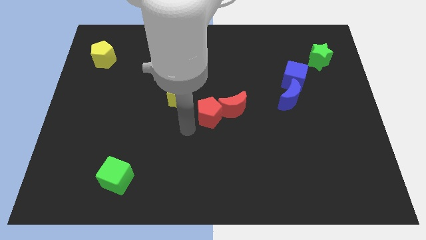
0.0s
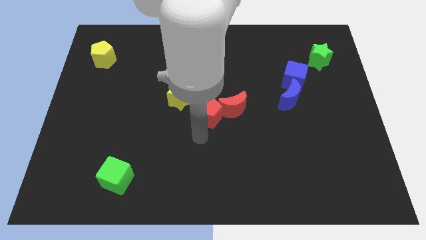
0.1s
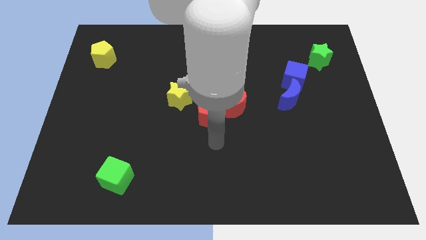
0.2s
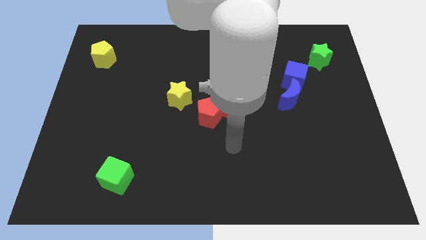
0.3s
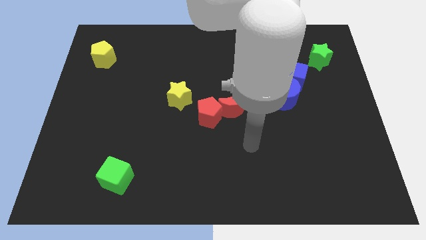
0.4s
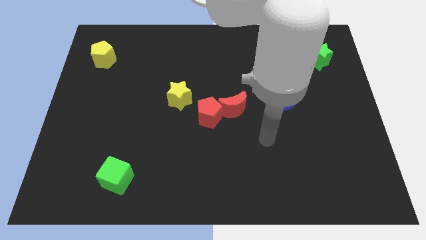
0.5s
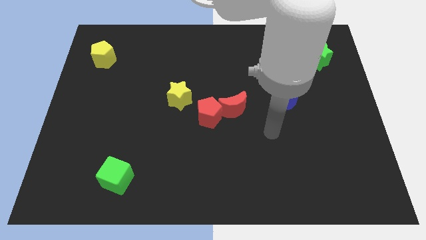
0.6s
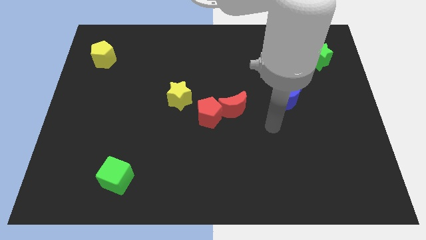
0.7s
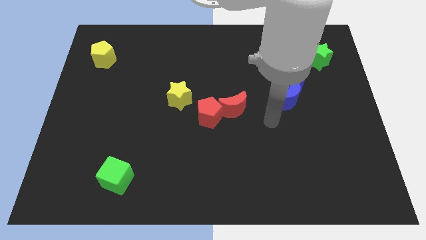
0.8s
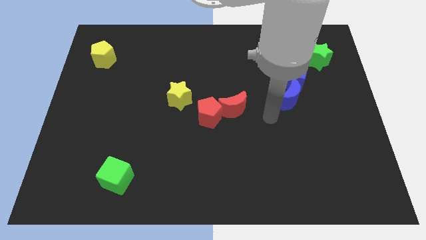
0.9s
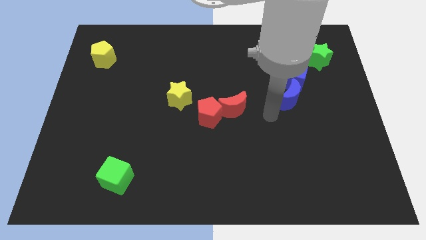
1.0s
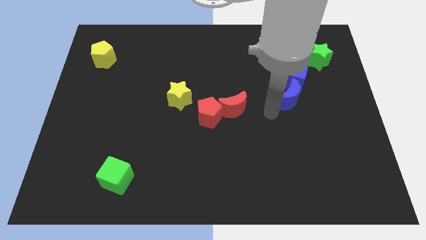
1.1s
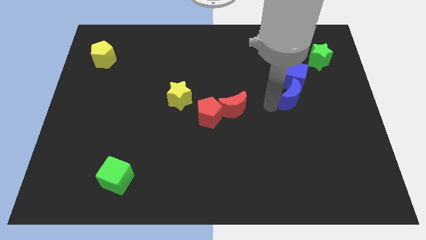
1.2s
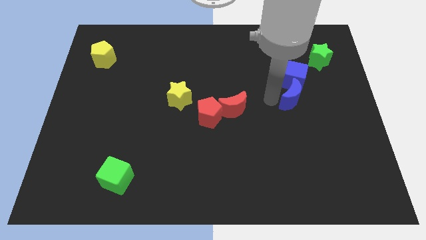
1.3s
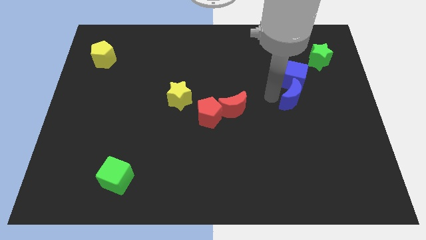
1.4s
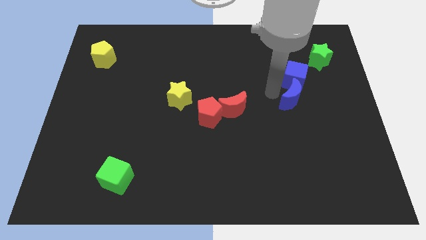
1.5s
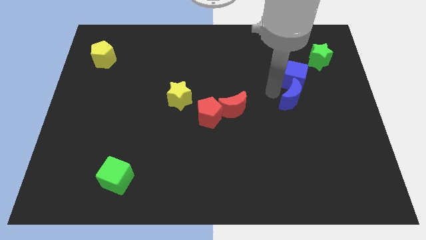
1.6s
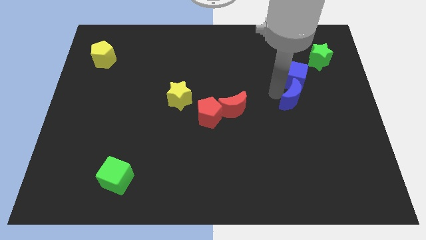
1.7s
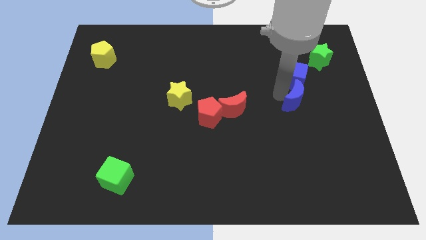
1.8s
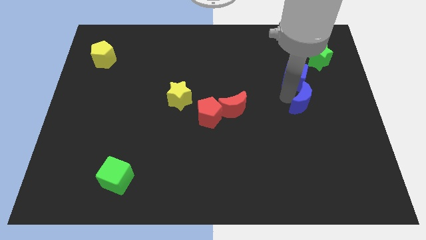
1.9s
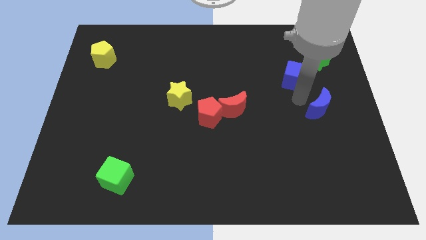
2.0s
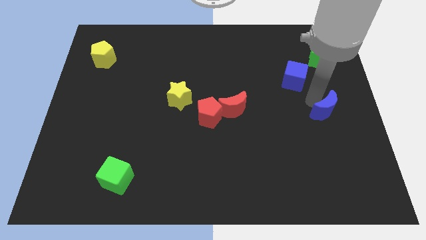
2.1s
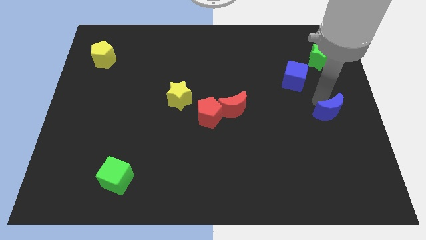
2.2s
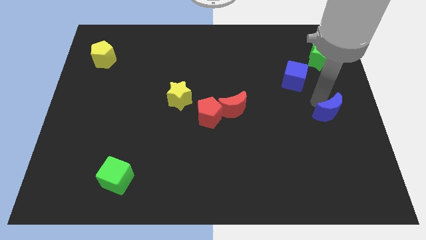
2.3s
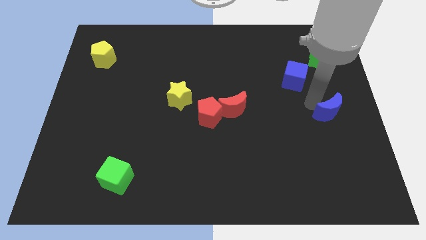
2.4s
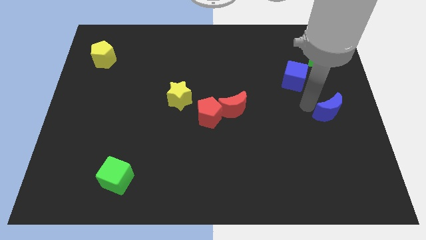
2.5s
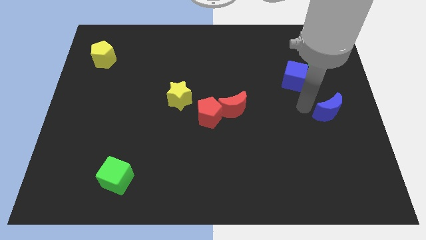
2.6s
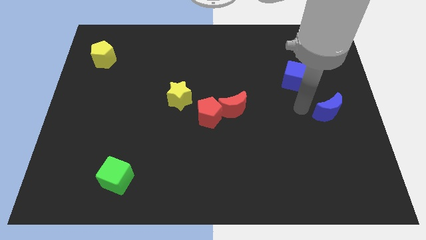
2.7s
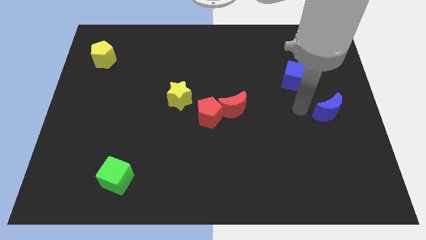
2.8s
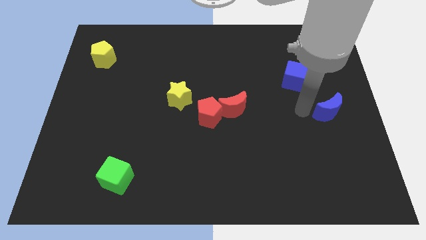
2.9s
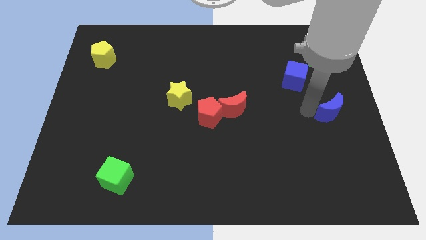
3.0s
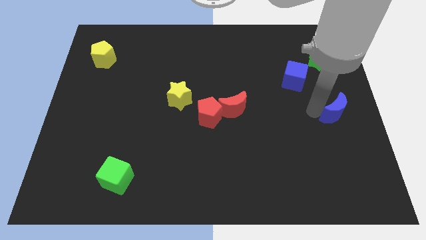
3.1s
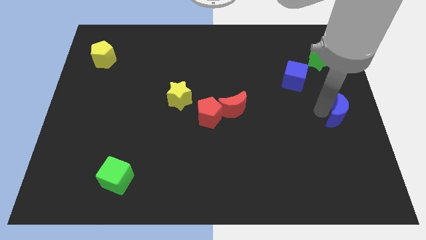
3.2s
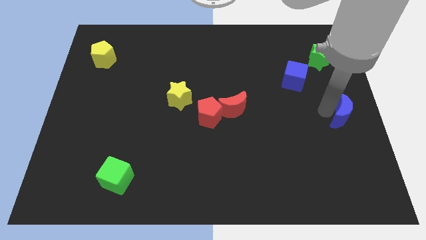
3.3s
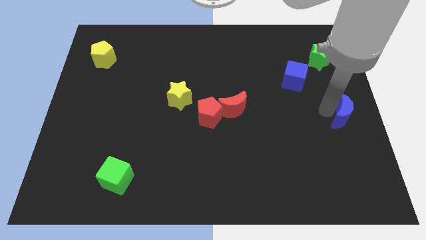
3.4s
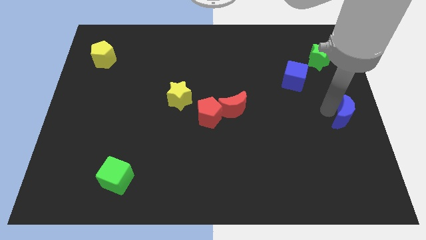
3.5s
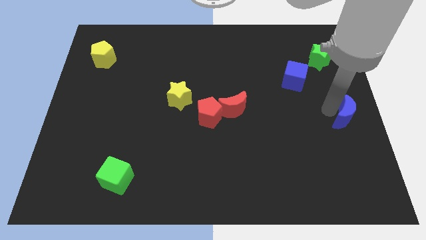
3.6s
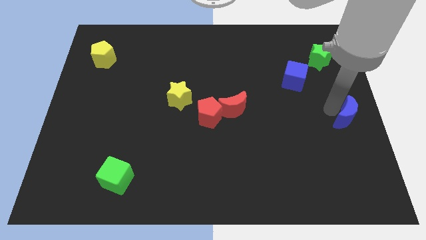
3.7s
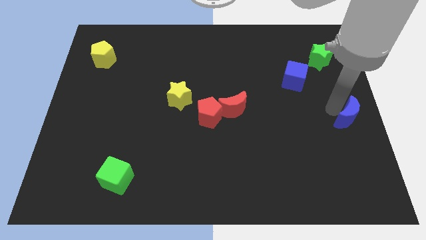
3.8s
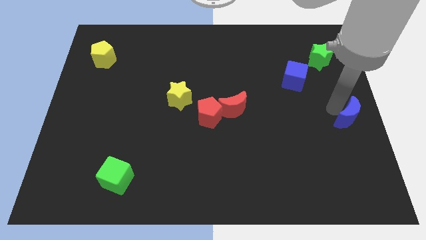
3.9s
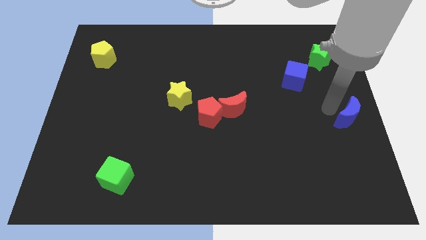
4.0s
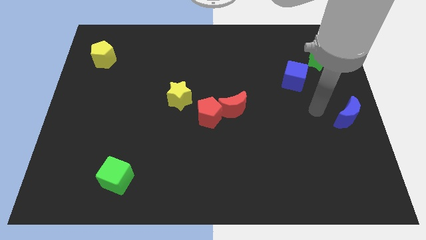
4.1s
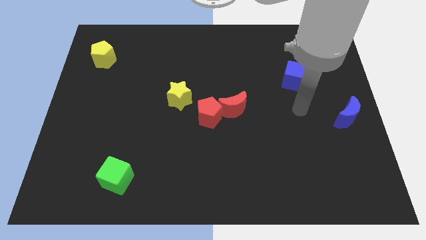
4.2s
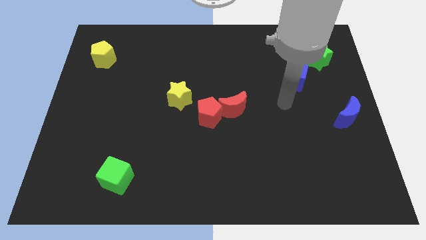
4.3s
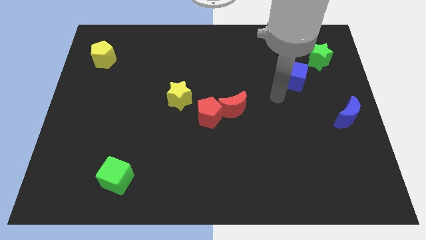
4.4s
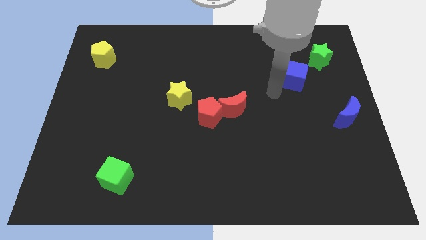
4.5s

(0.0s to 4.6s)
move the blue crescent to the center right of the board

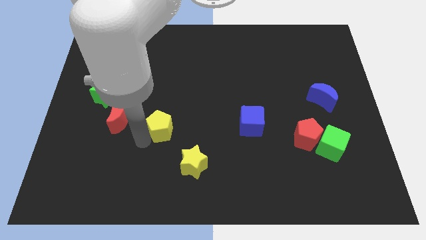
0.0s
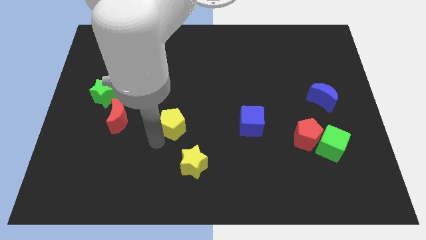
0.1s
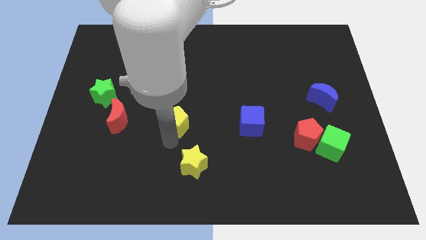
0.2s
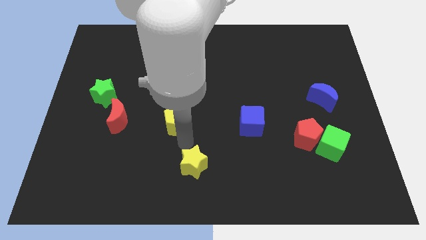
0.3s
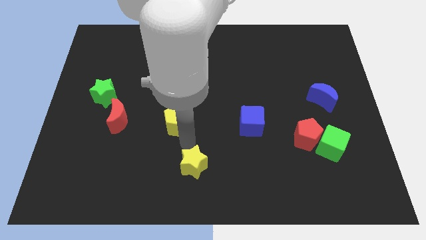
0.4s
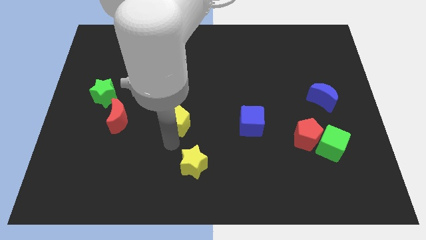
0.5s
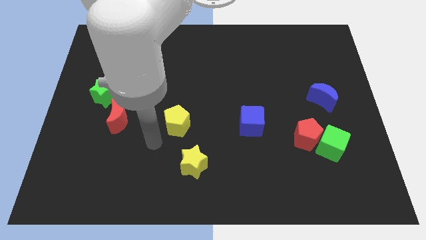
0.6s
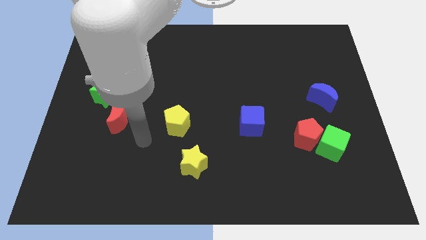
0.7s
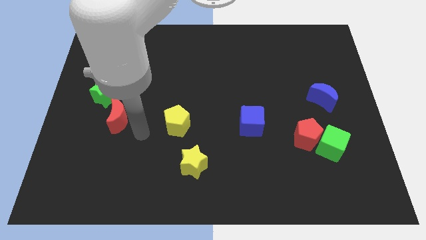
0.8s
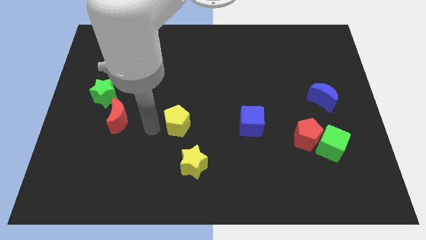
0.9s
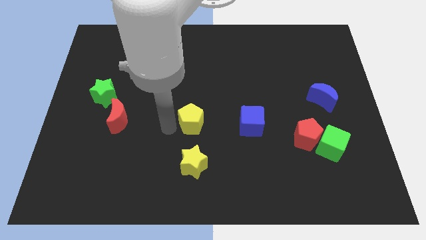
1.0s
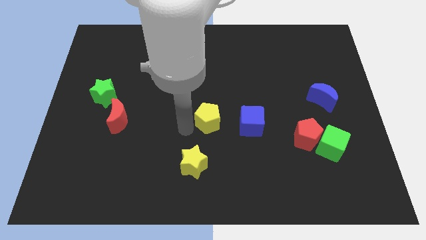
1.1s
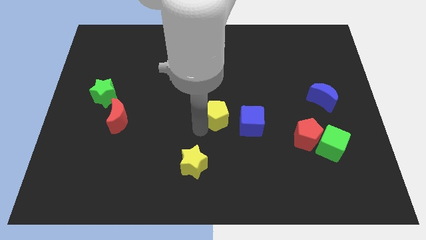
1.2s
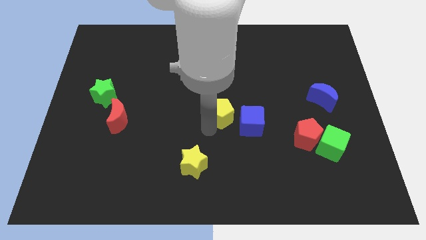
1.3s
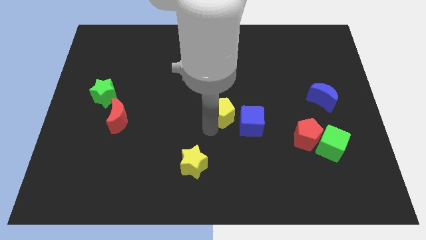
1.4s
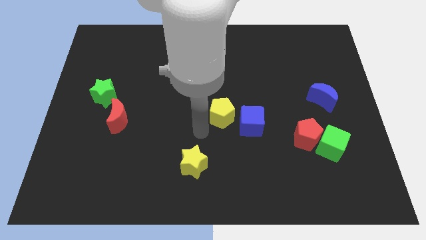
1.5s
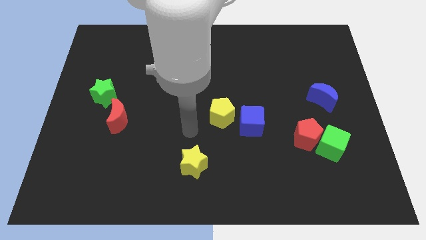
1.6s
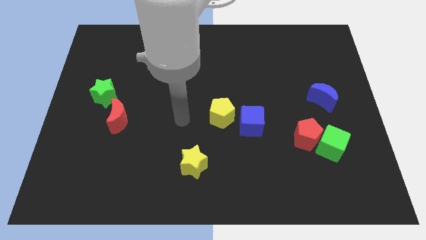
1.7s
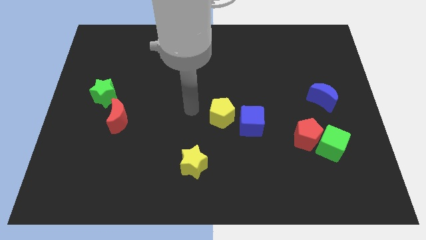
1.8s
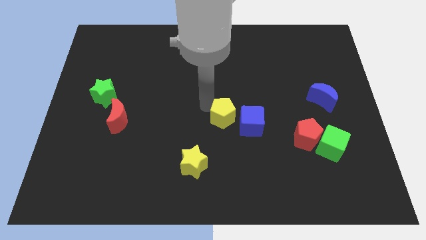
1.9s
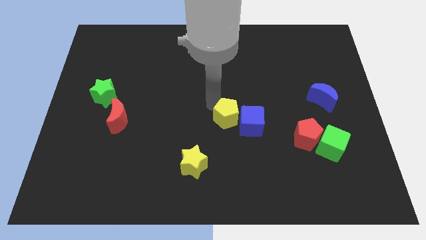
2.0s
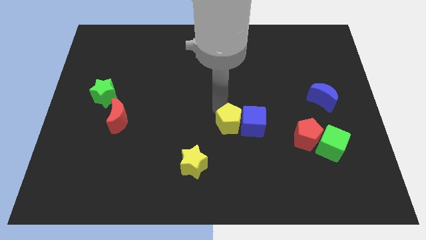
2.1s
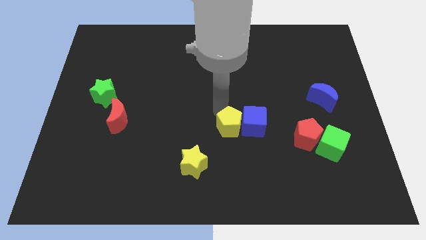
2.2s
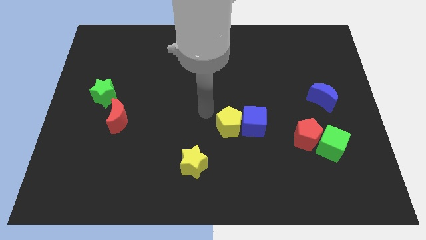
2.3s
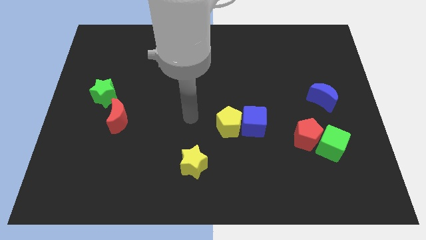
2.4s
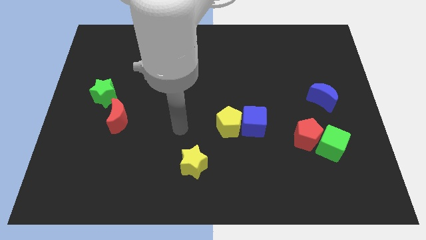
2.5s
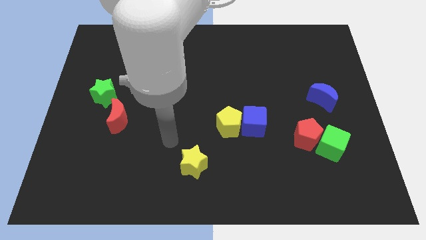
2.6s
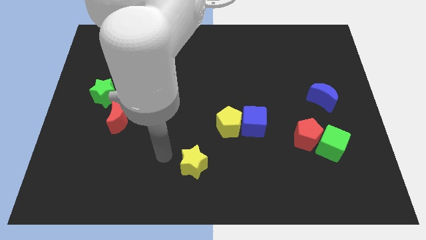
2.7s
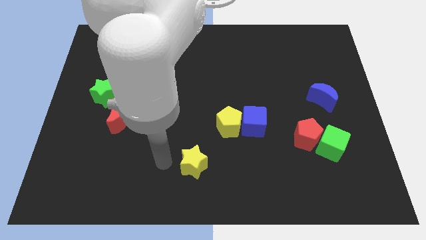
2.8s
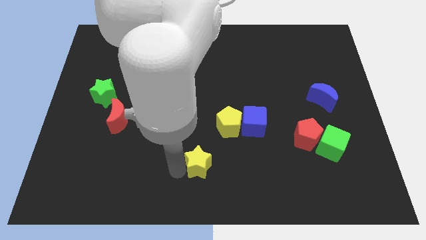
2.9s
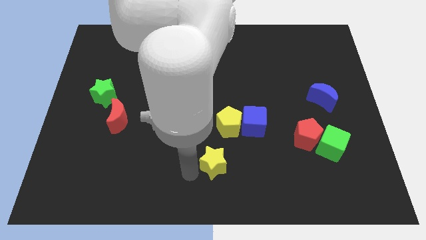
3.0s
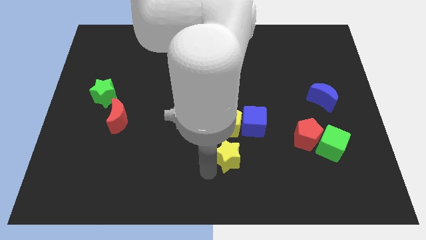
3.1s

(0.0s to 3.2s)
place yellow star below yellow pentagon

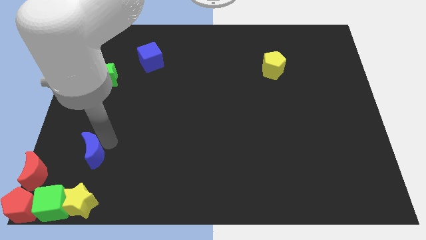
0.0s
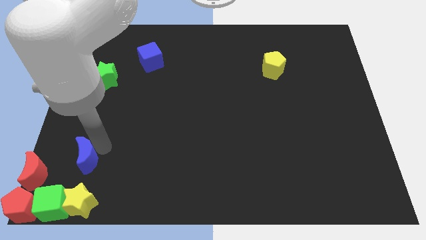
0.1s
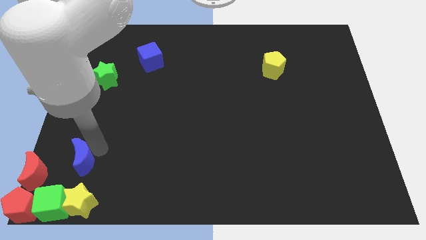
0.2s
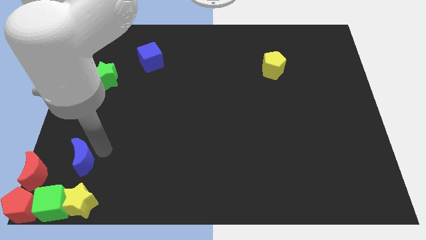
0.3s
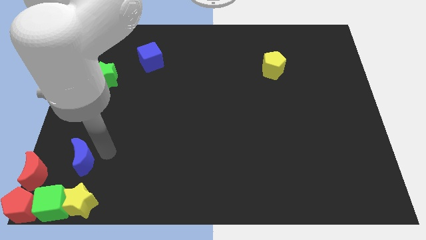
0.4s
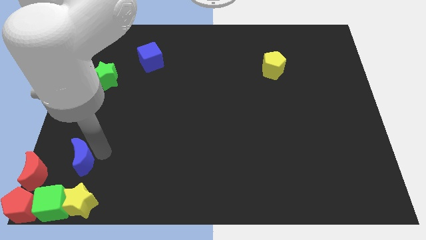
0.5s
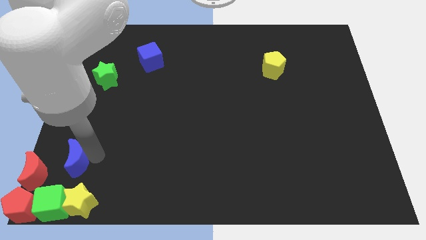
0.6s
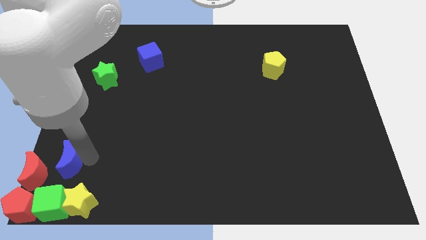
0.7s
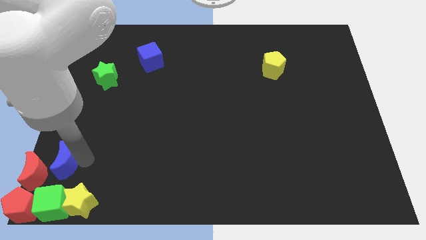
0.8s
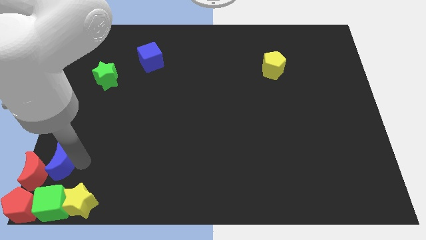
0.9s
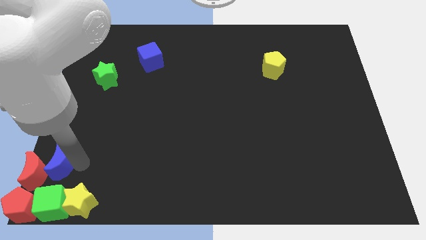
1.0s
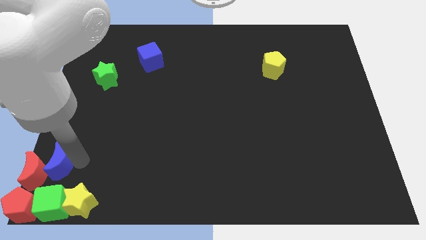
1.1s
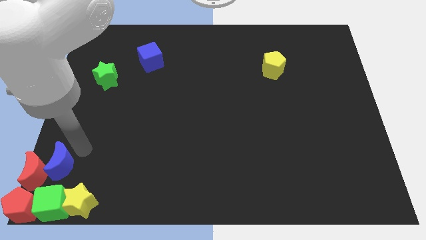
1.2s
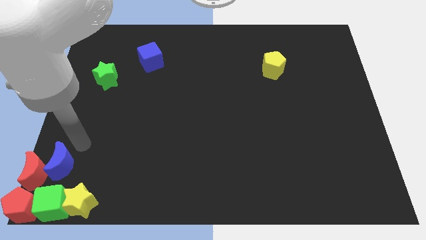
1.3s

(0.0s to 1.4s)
place the blue crescent at the top of green cube
